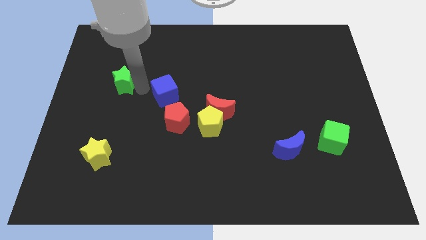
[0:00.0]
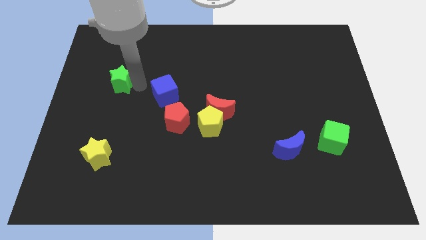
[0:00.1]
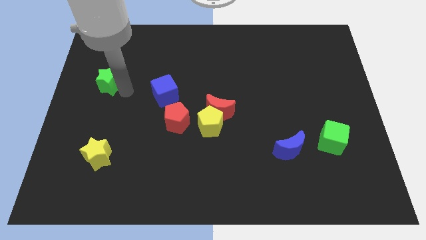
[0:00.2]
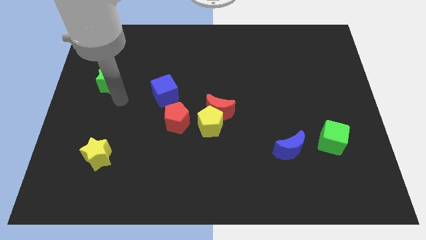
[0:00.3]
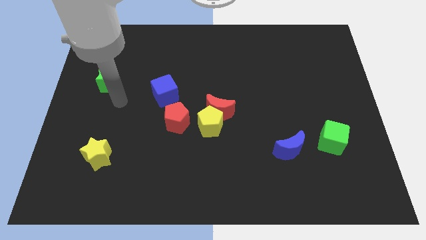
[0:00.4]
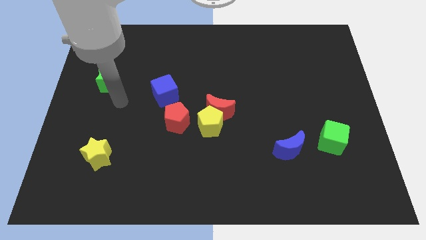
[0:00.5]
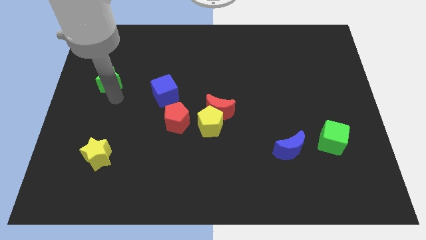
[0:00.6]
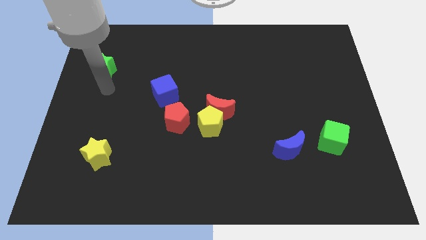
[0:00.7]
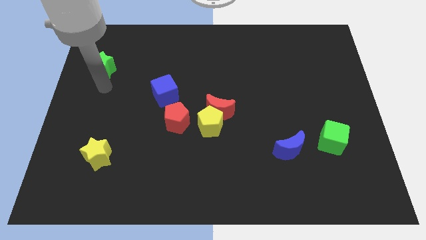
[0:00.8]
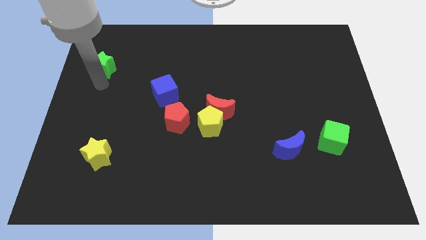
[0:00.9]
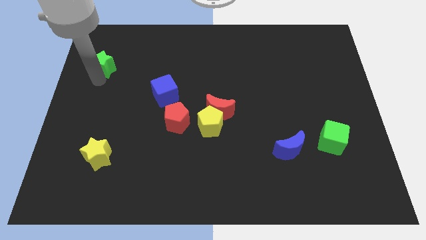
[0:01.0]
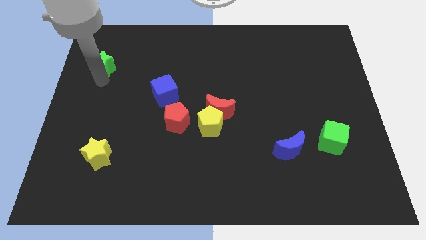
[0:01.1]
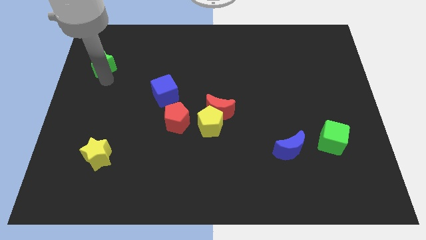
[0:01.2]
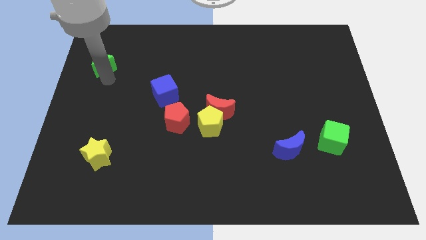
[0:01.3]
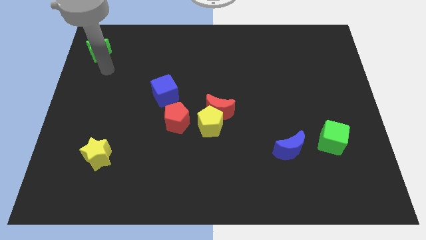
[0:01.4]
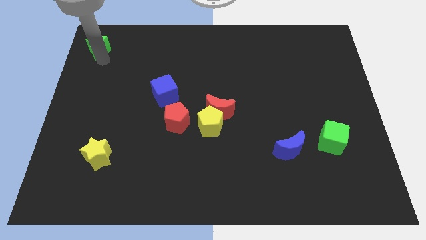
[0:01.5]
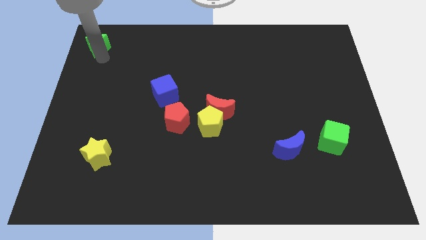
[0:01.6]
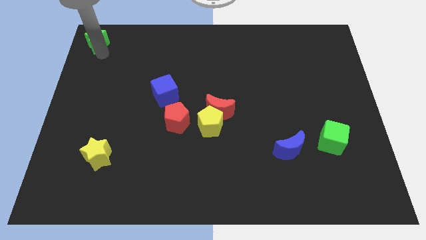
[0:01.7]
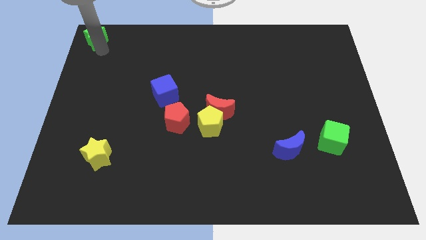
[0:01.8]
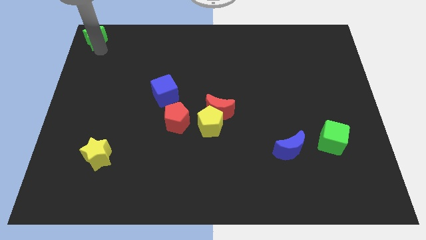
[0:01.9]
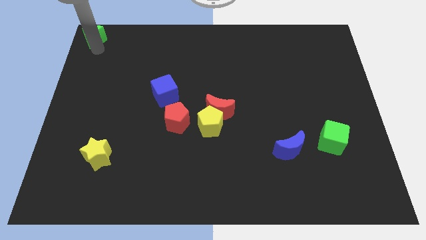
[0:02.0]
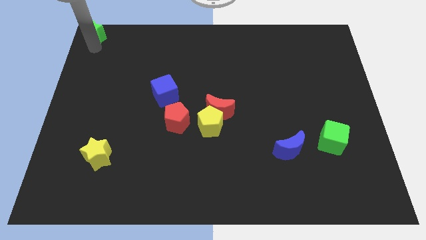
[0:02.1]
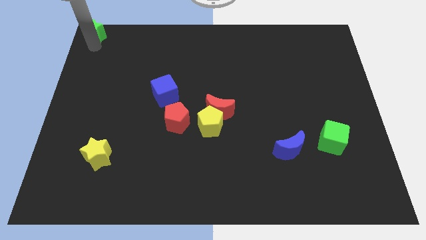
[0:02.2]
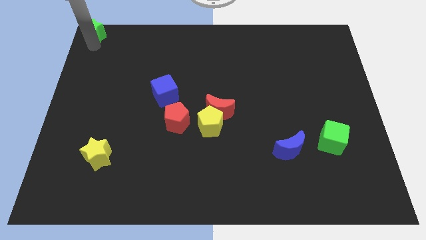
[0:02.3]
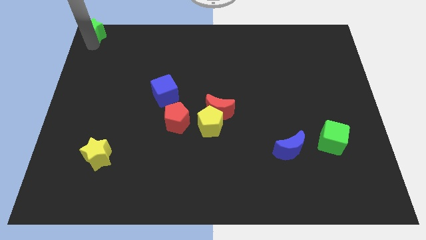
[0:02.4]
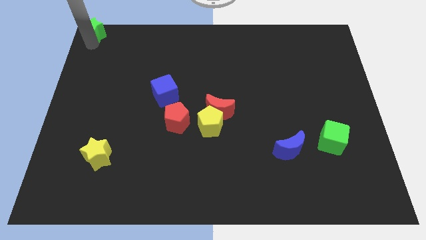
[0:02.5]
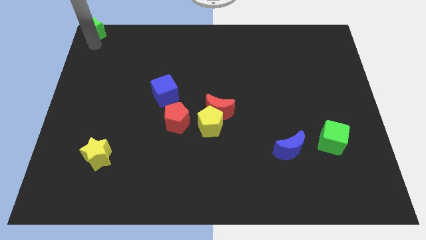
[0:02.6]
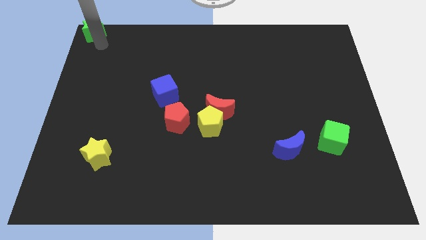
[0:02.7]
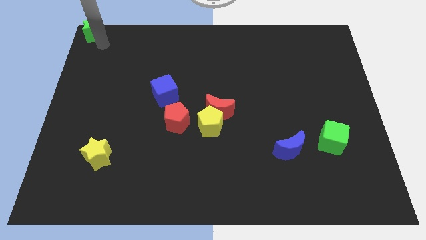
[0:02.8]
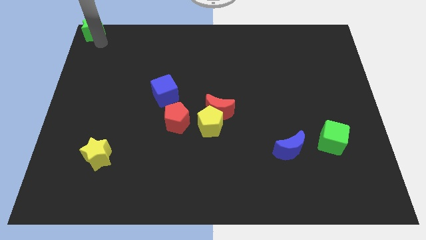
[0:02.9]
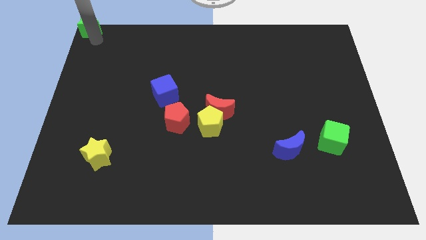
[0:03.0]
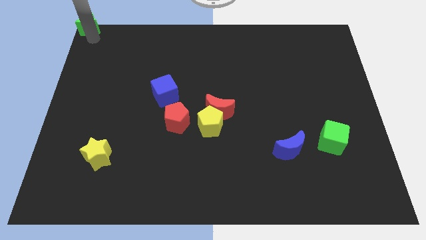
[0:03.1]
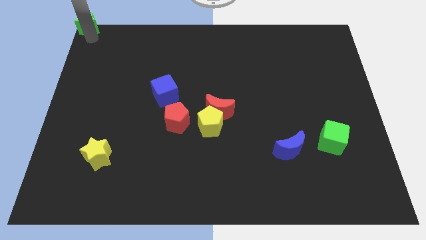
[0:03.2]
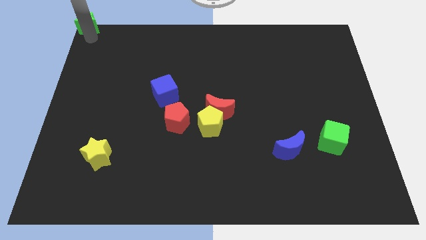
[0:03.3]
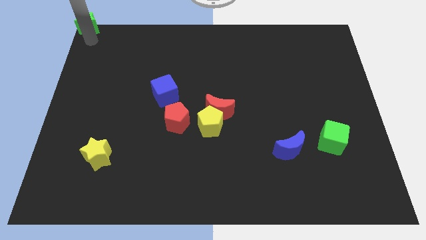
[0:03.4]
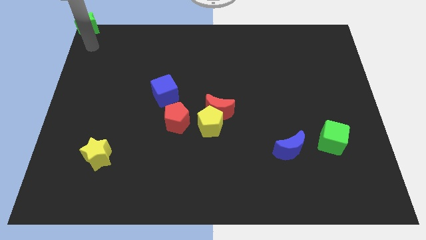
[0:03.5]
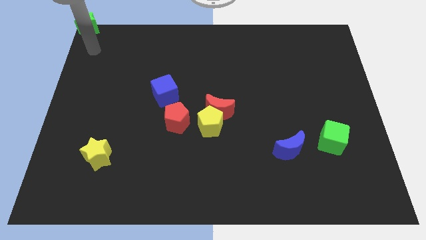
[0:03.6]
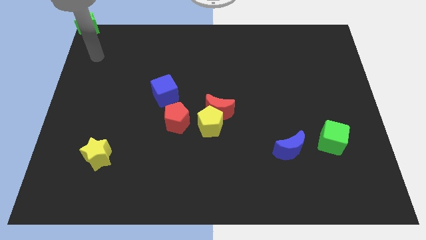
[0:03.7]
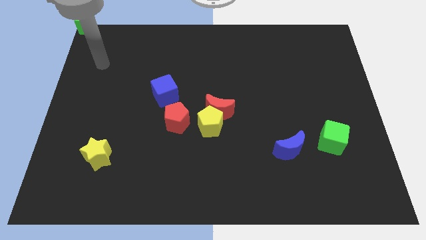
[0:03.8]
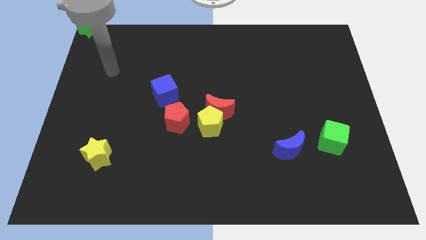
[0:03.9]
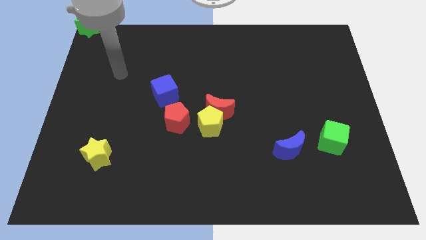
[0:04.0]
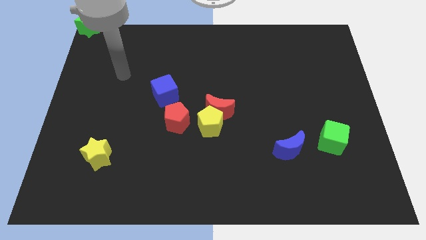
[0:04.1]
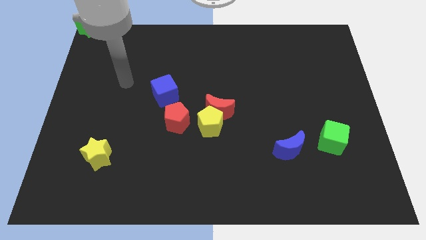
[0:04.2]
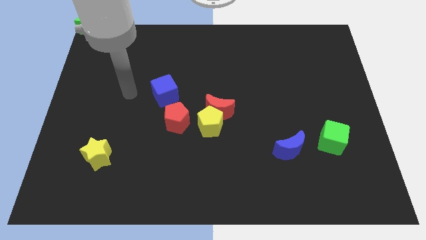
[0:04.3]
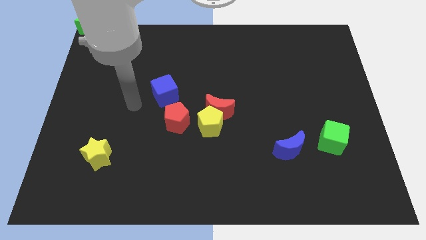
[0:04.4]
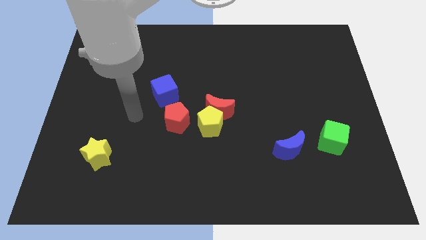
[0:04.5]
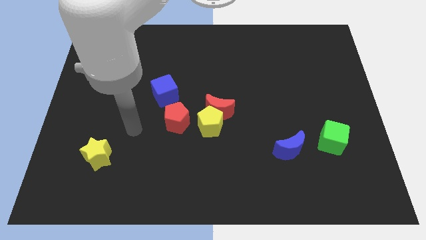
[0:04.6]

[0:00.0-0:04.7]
place the green star at the top left corner of the board

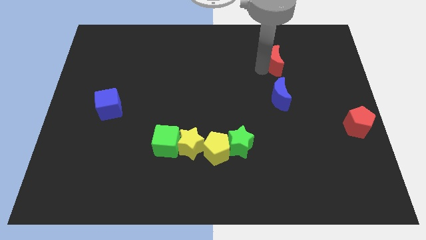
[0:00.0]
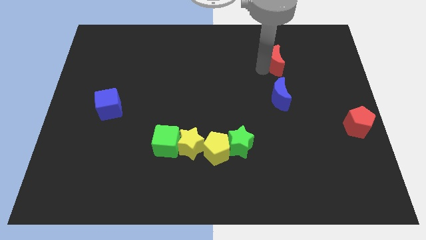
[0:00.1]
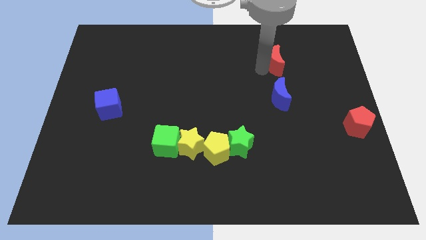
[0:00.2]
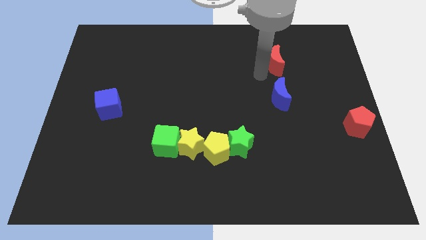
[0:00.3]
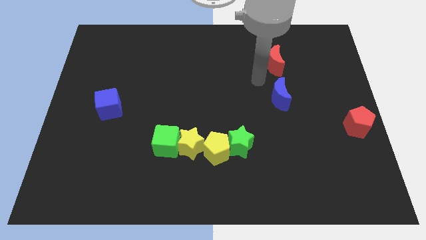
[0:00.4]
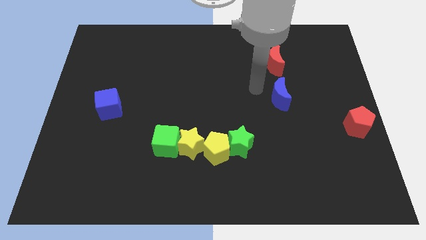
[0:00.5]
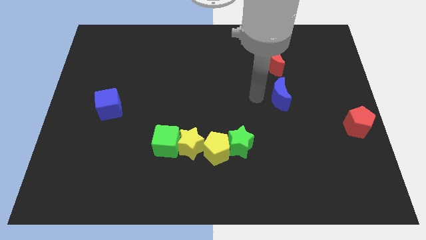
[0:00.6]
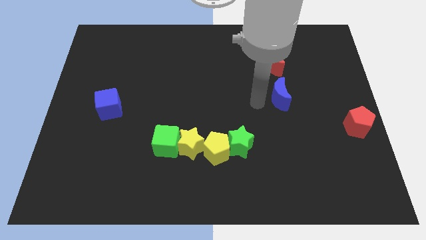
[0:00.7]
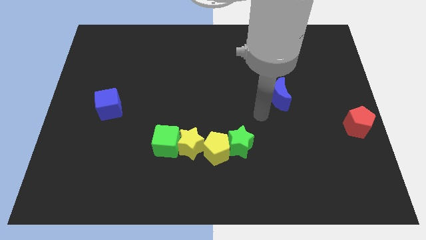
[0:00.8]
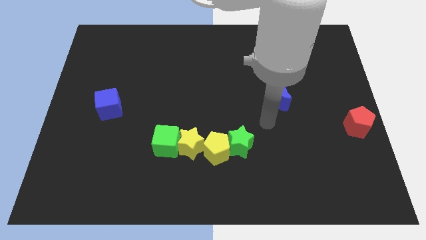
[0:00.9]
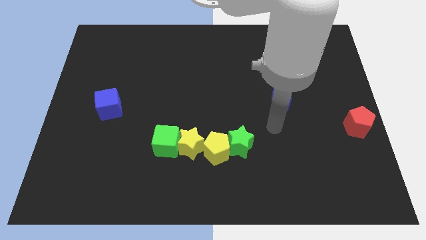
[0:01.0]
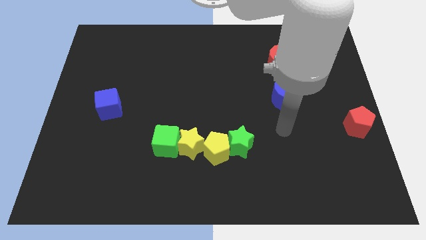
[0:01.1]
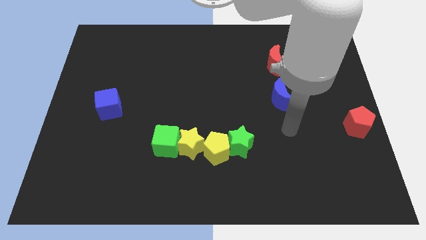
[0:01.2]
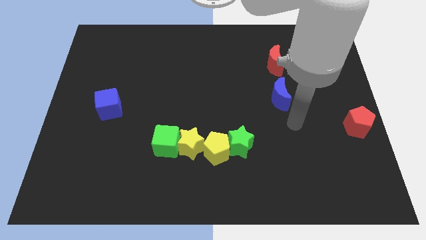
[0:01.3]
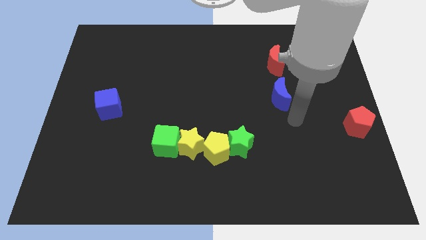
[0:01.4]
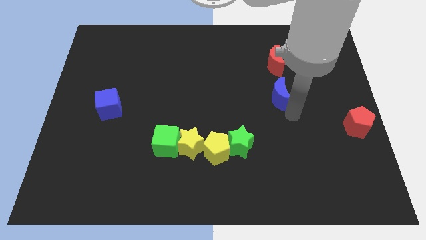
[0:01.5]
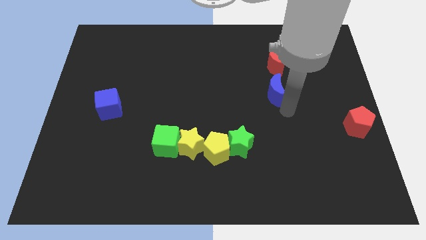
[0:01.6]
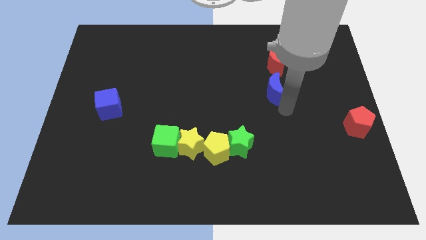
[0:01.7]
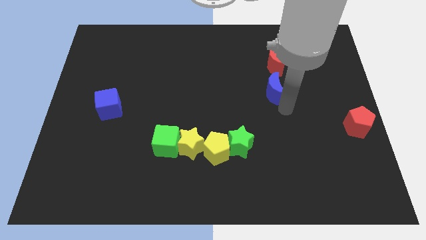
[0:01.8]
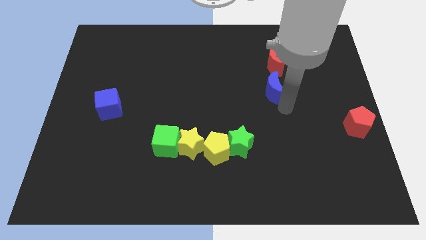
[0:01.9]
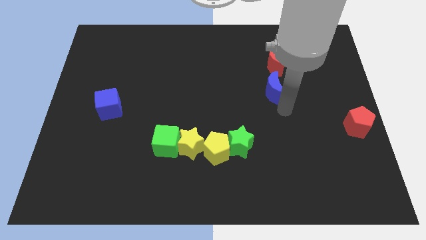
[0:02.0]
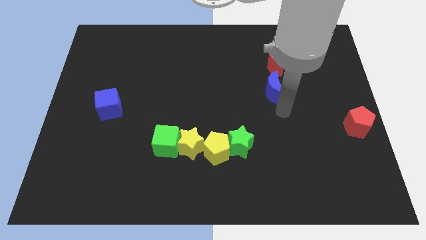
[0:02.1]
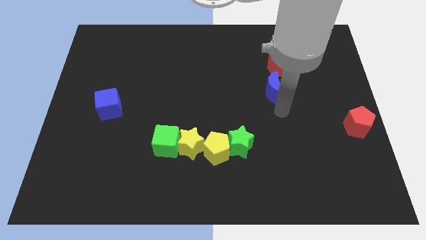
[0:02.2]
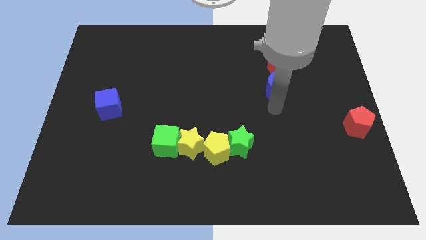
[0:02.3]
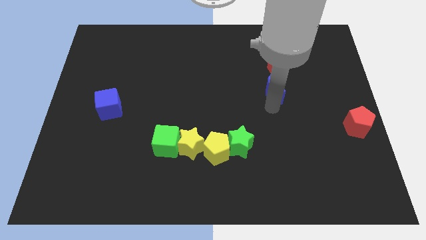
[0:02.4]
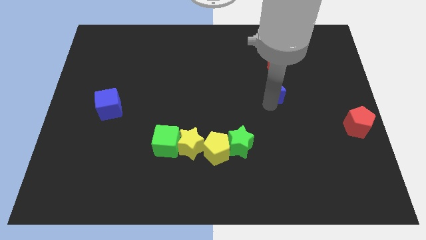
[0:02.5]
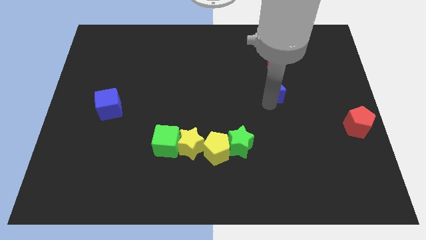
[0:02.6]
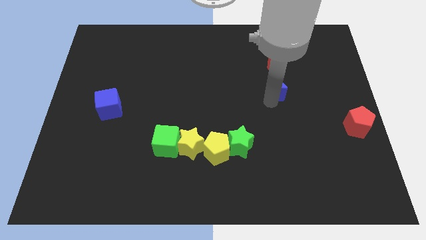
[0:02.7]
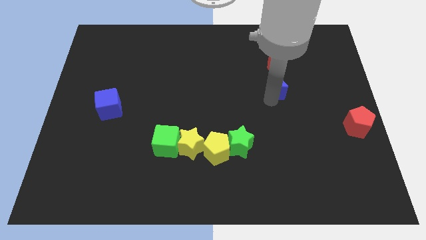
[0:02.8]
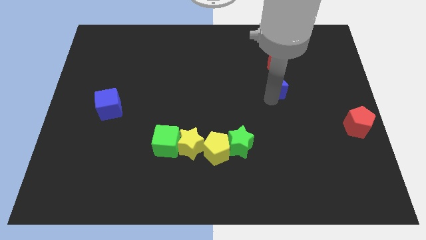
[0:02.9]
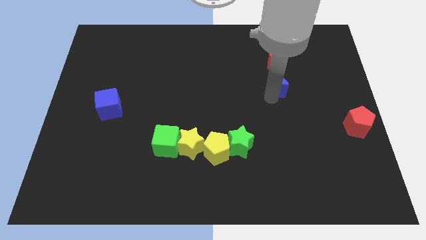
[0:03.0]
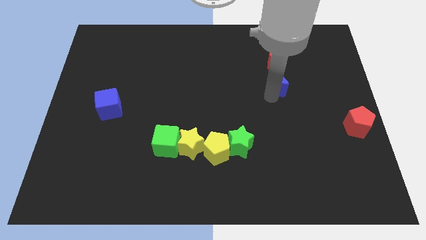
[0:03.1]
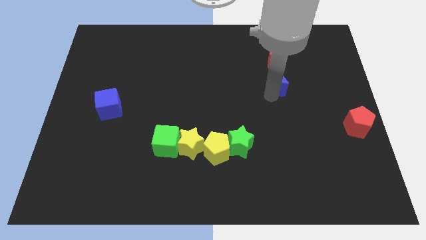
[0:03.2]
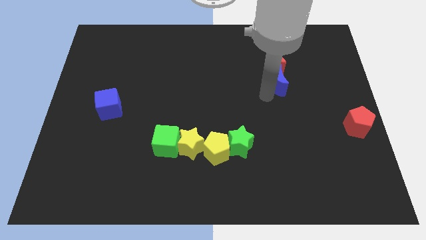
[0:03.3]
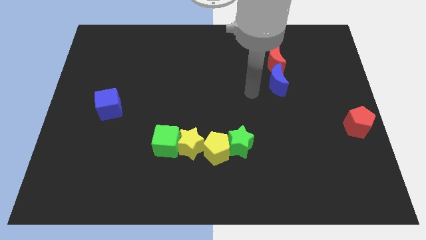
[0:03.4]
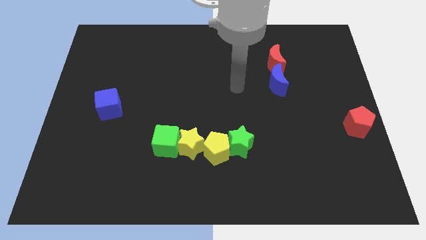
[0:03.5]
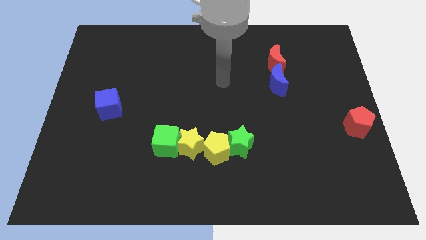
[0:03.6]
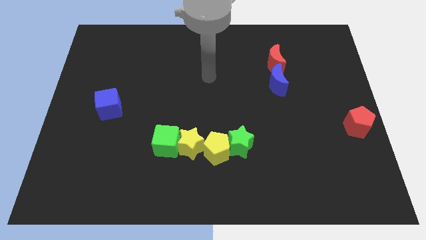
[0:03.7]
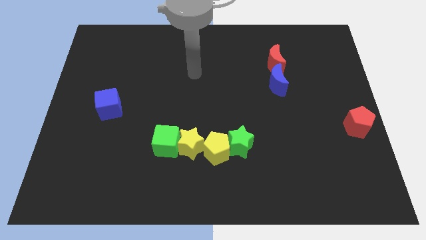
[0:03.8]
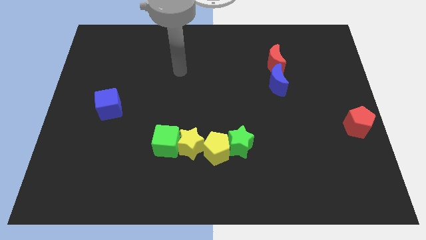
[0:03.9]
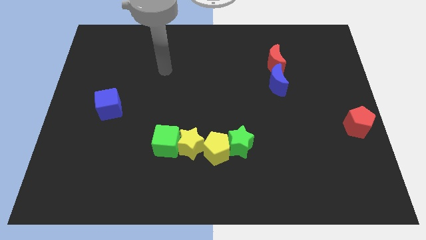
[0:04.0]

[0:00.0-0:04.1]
push blue moon into red moon

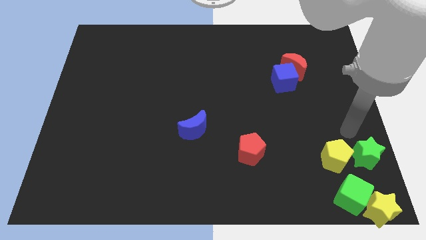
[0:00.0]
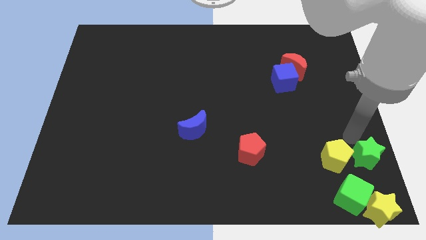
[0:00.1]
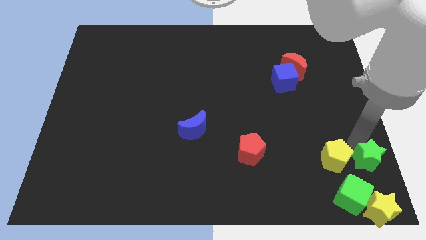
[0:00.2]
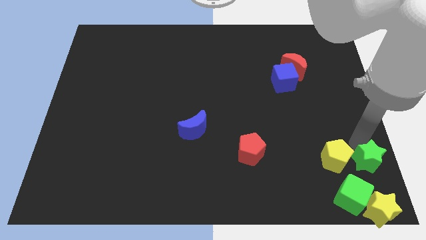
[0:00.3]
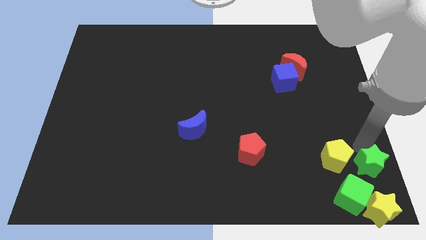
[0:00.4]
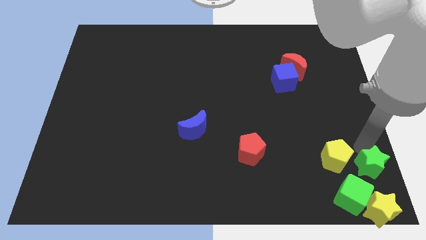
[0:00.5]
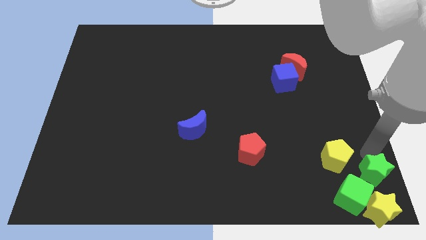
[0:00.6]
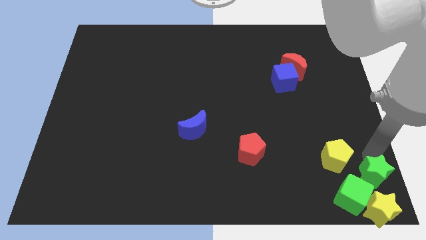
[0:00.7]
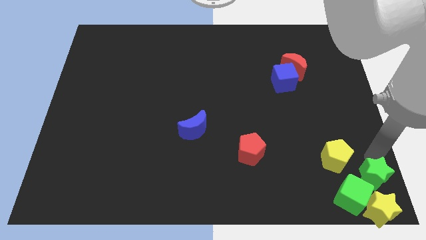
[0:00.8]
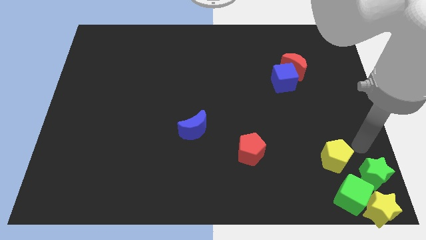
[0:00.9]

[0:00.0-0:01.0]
push the green star to the top of the yellow star
